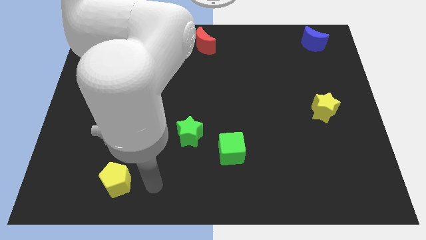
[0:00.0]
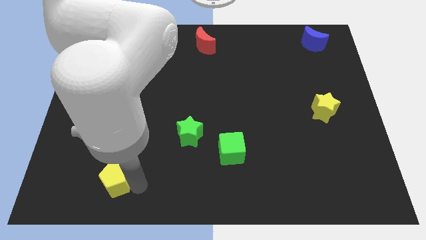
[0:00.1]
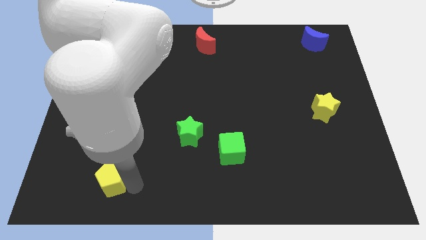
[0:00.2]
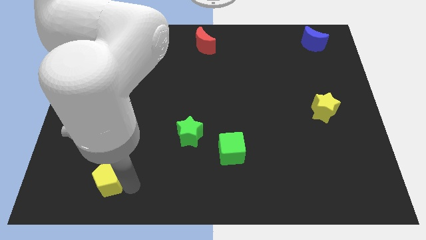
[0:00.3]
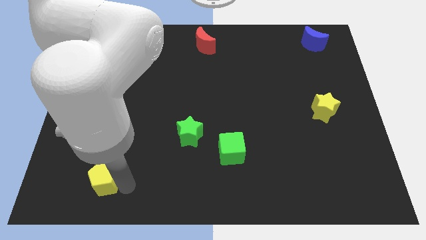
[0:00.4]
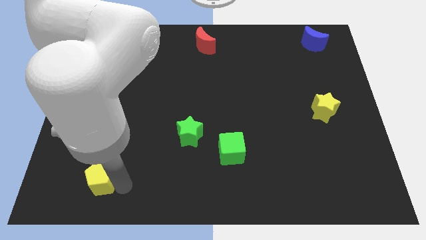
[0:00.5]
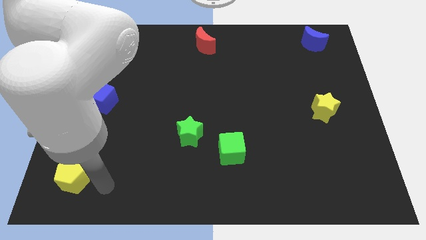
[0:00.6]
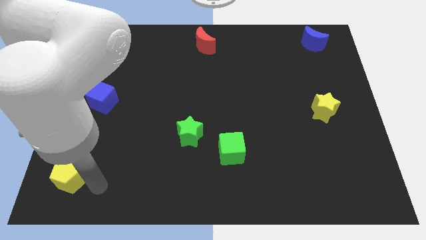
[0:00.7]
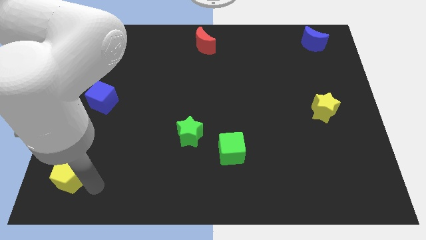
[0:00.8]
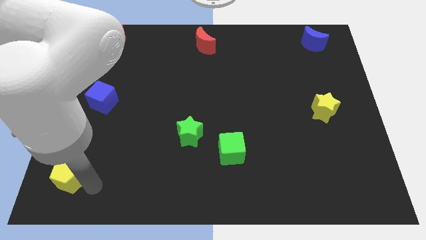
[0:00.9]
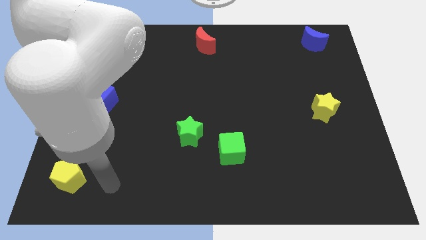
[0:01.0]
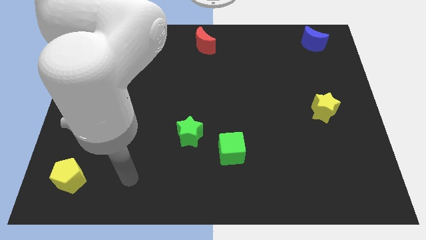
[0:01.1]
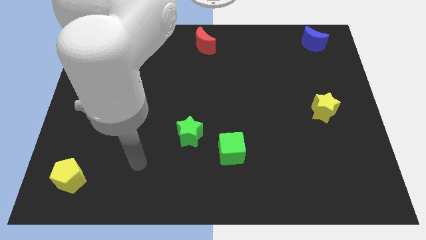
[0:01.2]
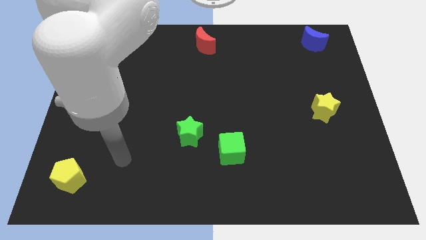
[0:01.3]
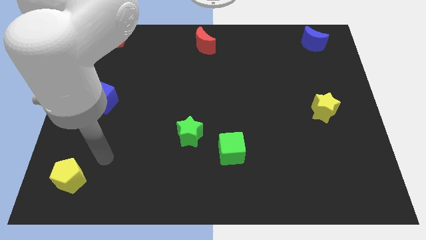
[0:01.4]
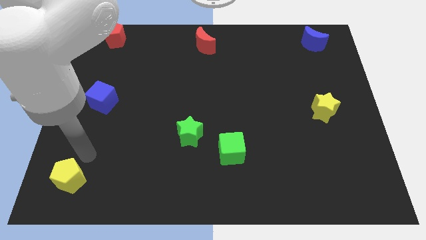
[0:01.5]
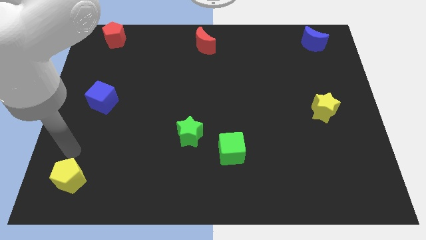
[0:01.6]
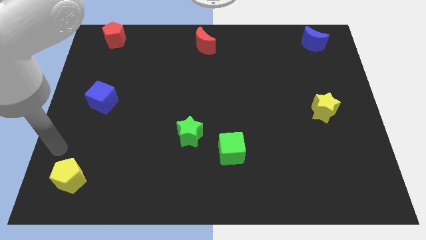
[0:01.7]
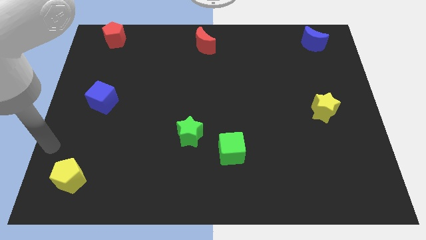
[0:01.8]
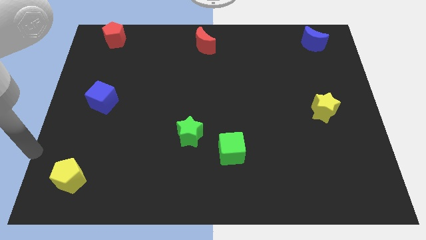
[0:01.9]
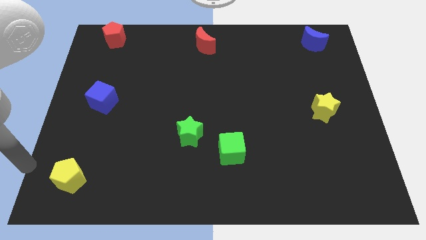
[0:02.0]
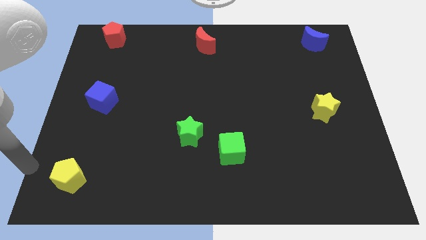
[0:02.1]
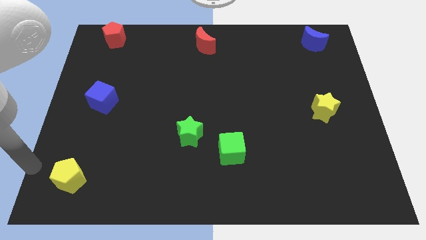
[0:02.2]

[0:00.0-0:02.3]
move the yellow pentagon slightly close to the bottom left of the board

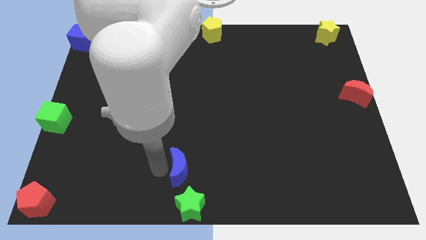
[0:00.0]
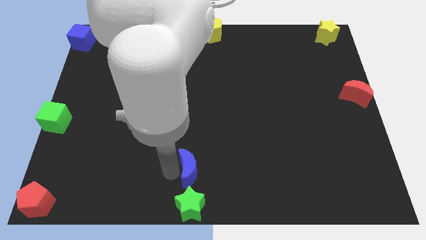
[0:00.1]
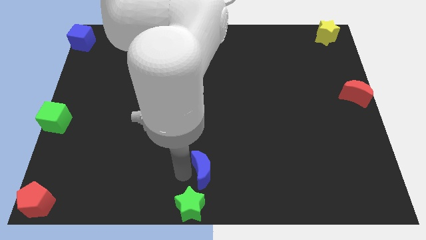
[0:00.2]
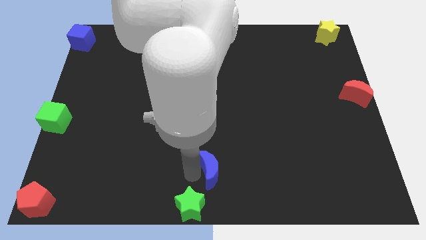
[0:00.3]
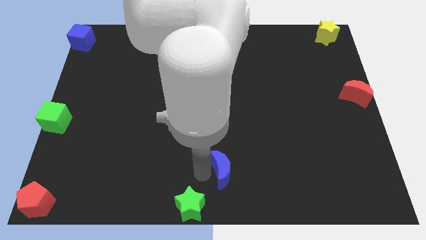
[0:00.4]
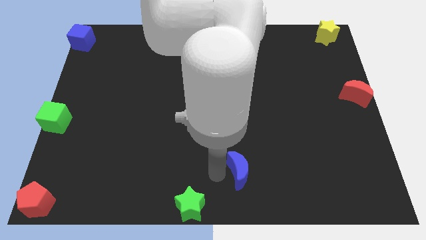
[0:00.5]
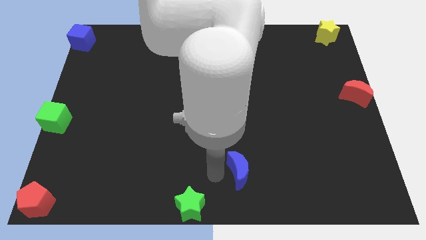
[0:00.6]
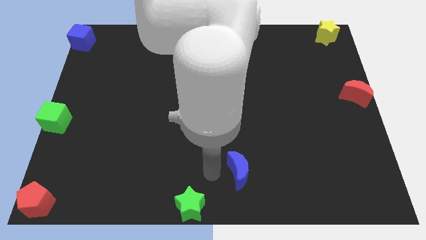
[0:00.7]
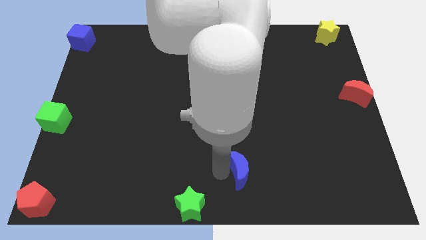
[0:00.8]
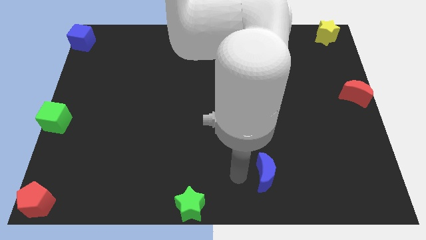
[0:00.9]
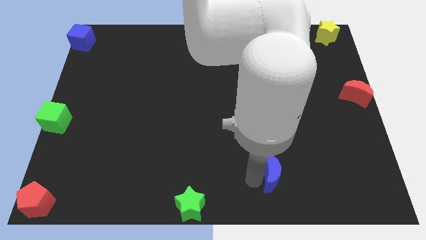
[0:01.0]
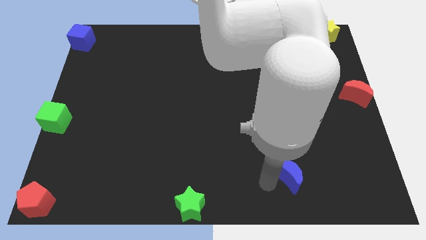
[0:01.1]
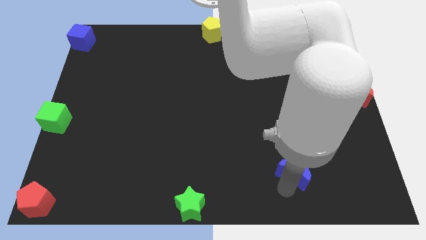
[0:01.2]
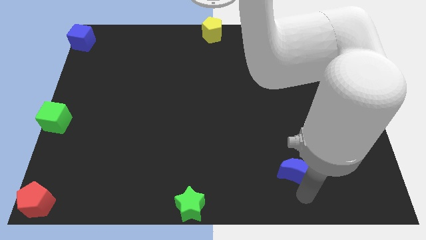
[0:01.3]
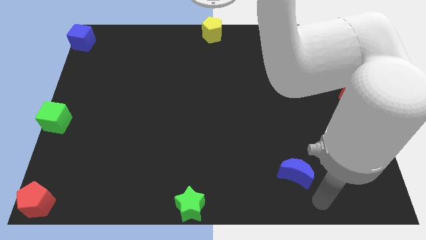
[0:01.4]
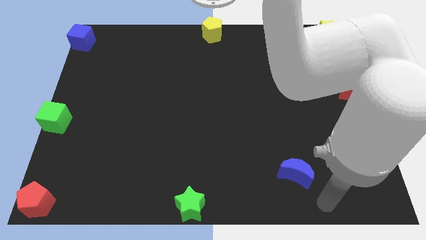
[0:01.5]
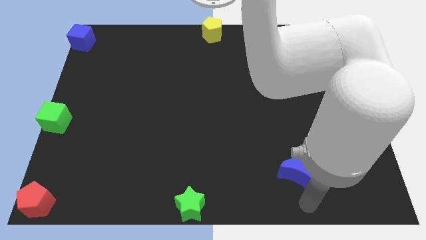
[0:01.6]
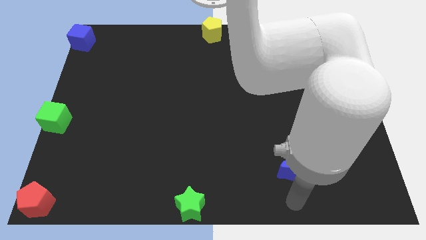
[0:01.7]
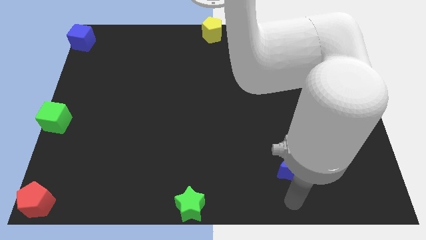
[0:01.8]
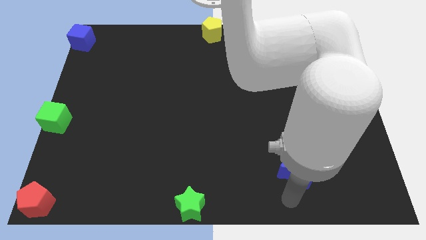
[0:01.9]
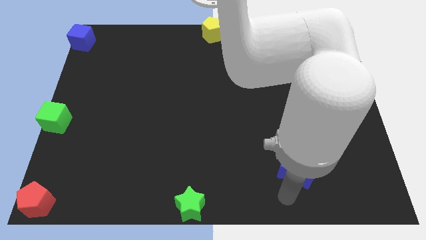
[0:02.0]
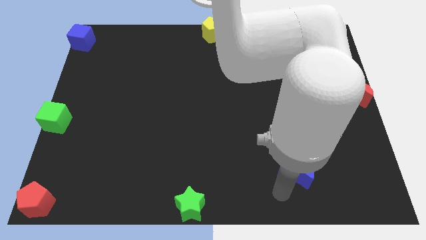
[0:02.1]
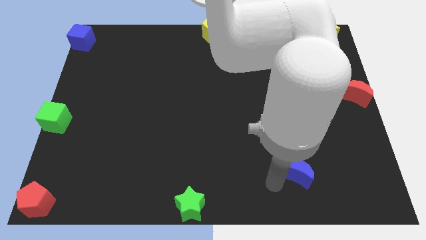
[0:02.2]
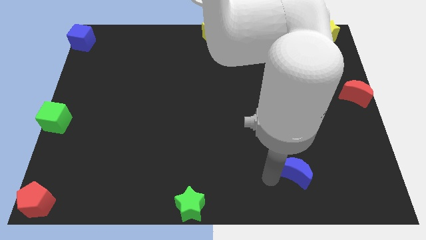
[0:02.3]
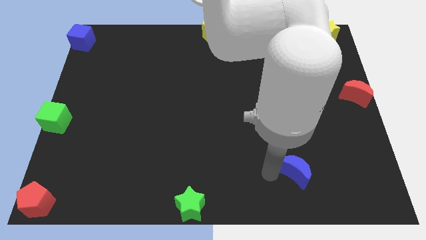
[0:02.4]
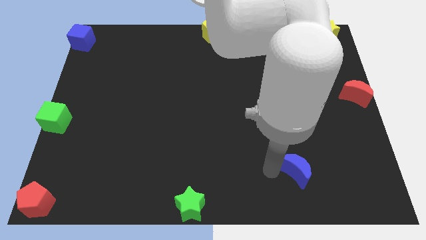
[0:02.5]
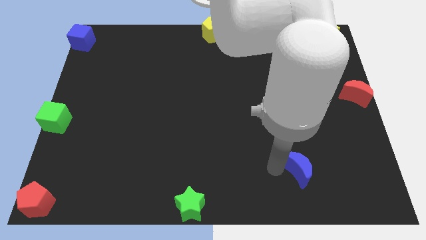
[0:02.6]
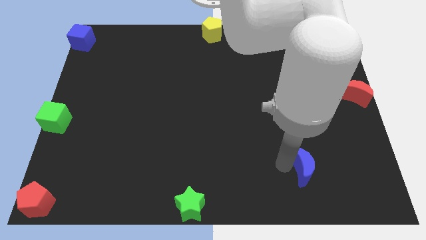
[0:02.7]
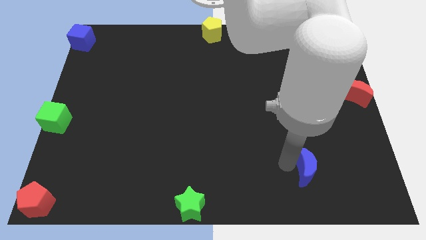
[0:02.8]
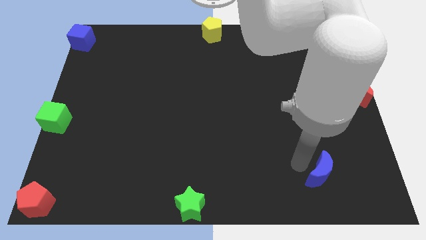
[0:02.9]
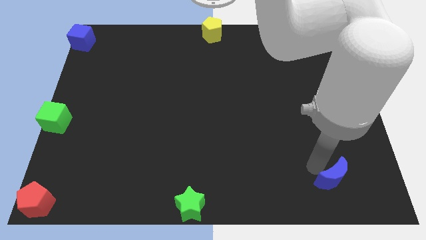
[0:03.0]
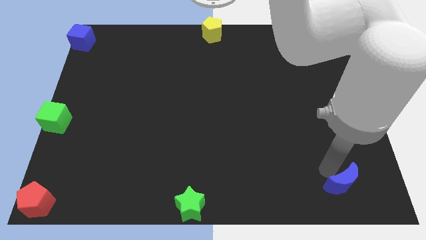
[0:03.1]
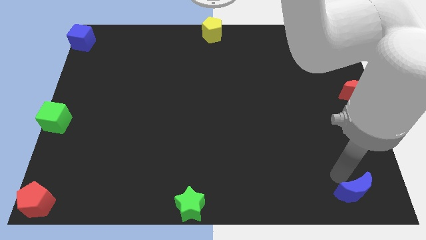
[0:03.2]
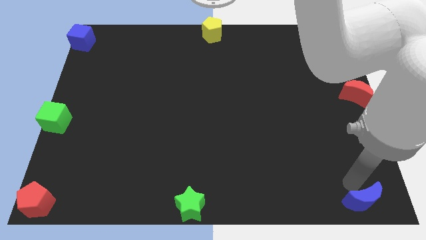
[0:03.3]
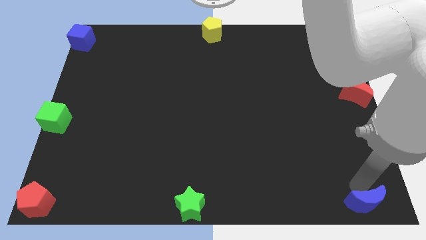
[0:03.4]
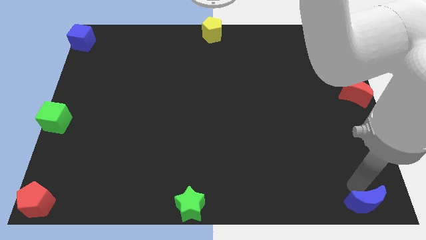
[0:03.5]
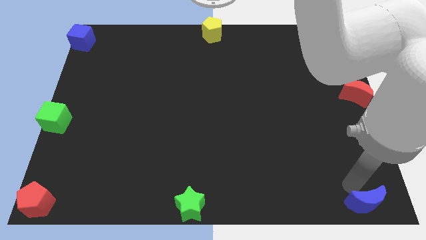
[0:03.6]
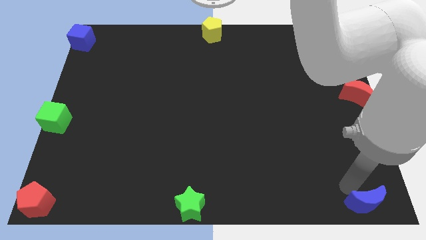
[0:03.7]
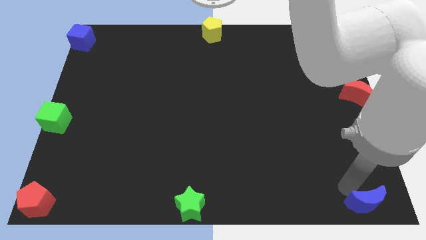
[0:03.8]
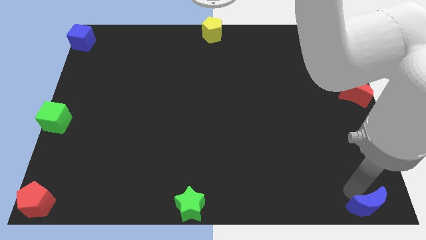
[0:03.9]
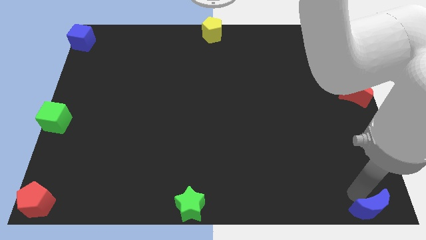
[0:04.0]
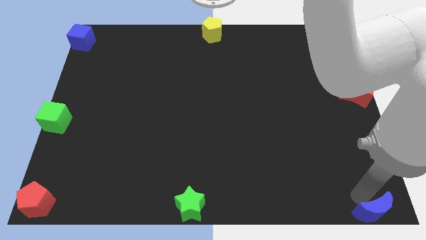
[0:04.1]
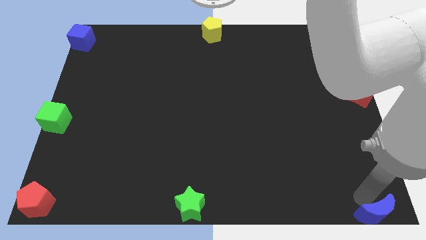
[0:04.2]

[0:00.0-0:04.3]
place the blue crescent to the bottom right corner of the board

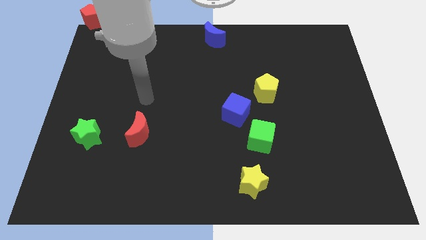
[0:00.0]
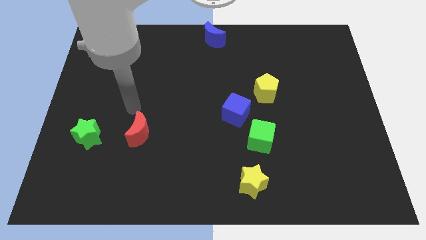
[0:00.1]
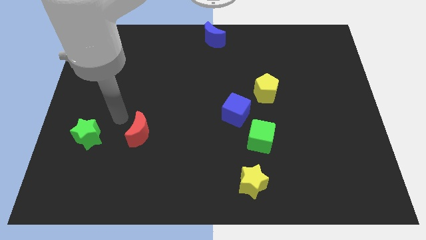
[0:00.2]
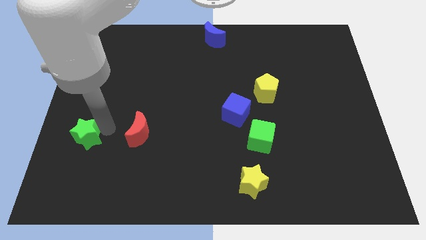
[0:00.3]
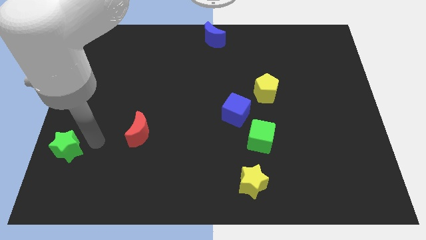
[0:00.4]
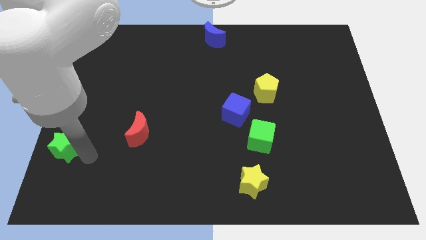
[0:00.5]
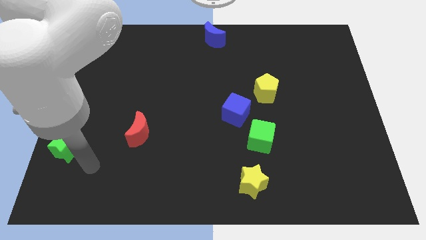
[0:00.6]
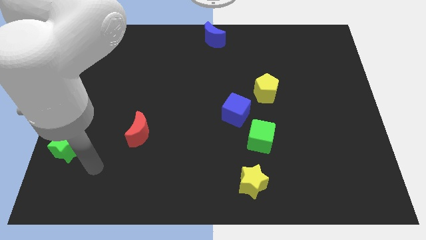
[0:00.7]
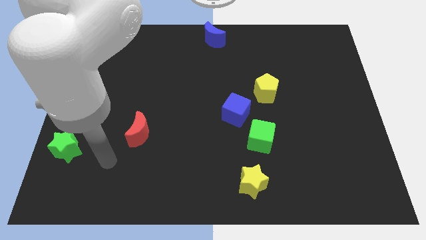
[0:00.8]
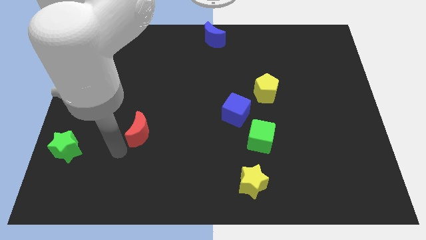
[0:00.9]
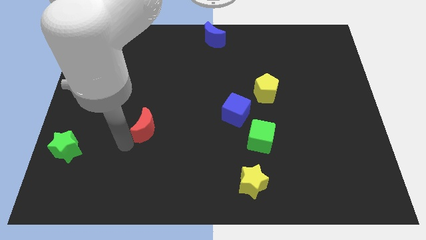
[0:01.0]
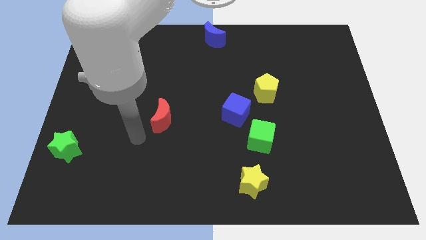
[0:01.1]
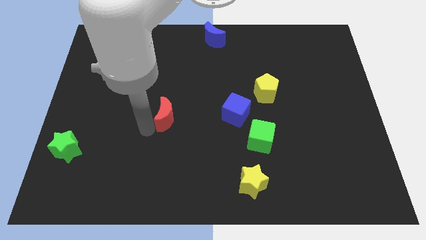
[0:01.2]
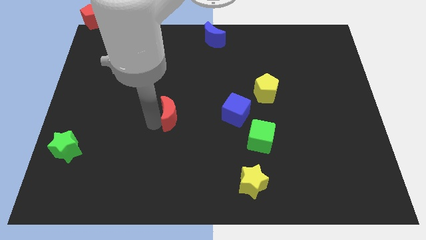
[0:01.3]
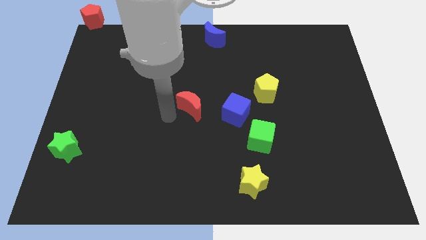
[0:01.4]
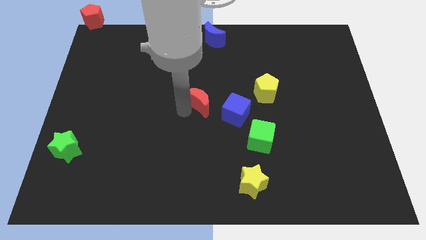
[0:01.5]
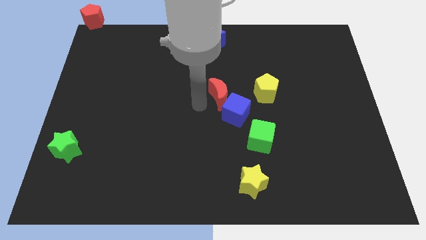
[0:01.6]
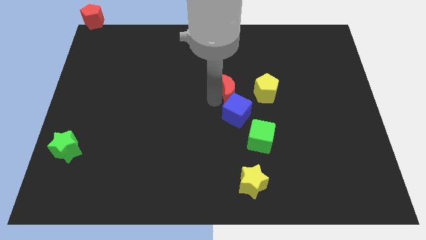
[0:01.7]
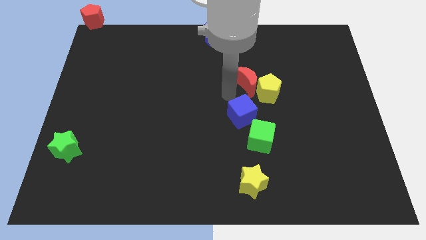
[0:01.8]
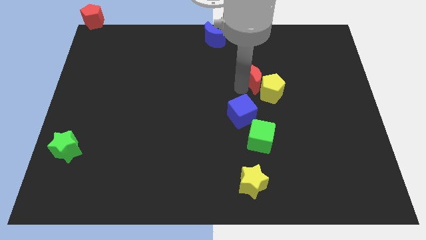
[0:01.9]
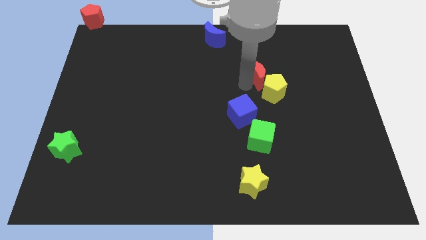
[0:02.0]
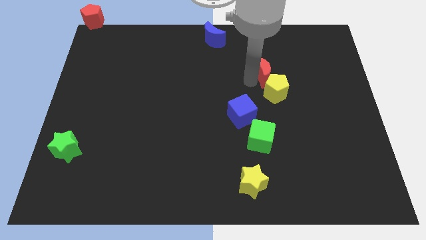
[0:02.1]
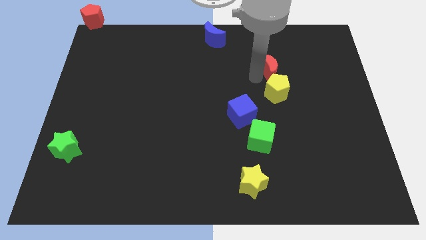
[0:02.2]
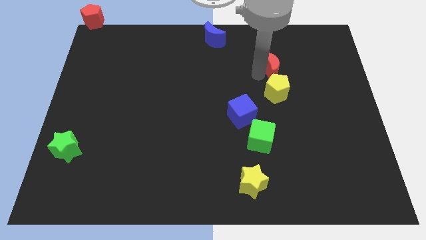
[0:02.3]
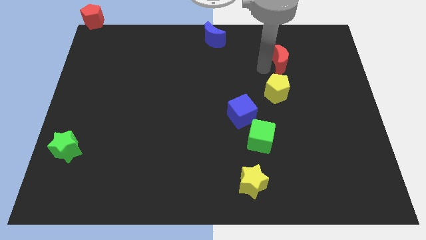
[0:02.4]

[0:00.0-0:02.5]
push red crescent above yellow pentagon
